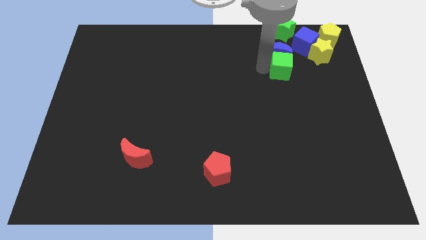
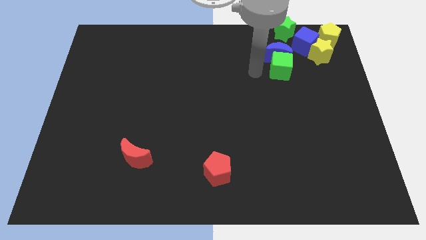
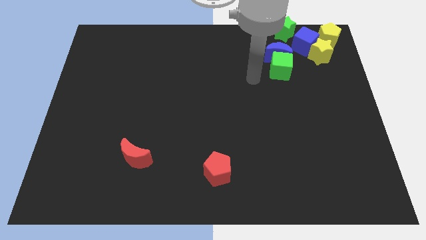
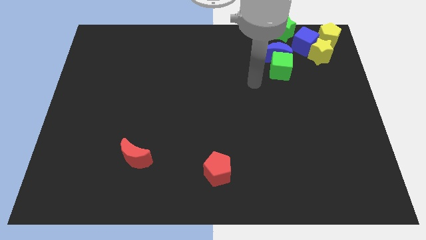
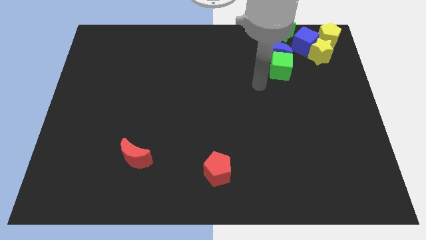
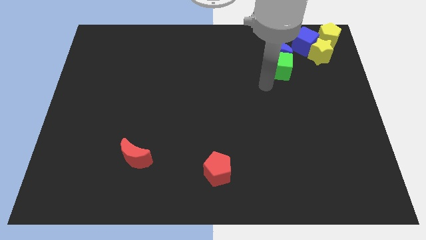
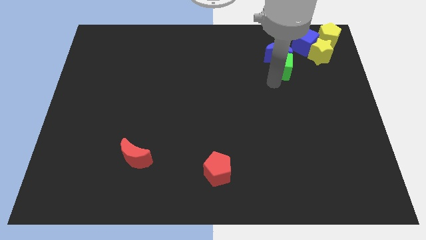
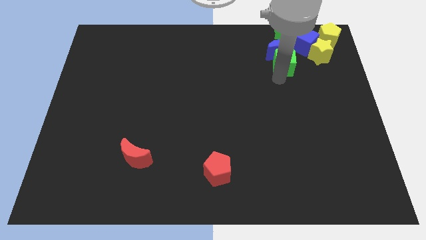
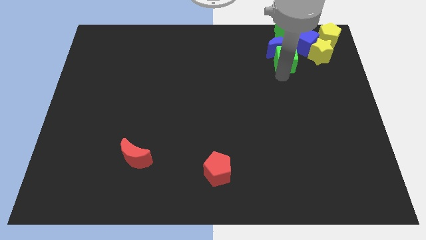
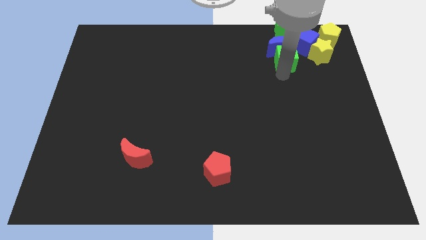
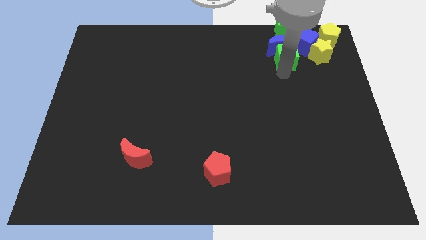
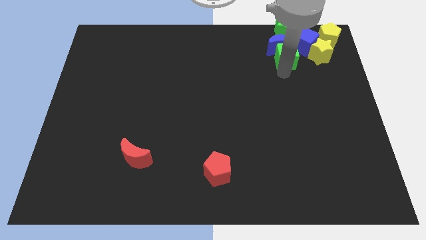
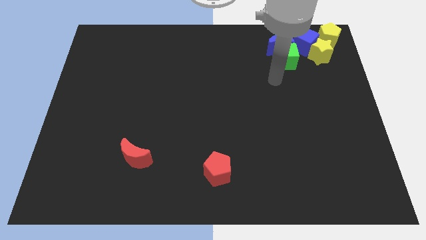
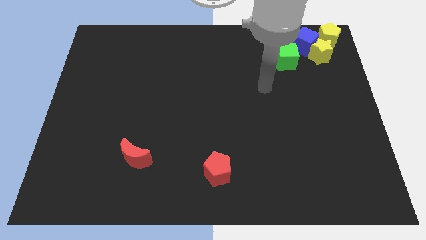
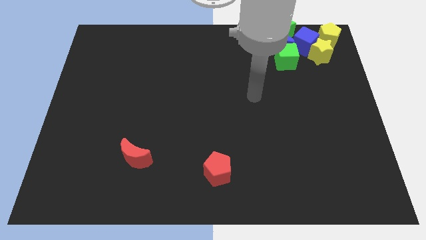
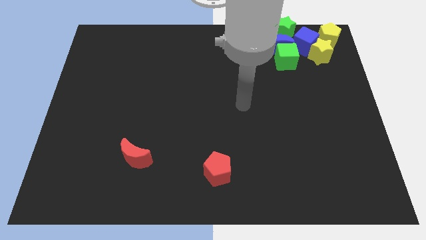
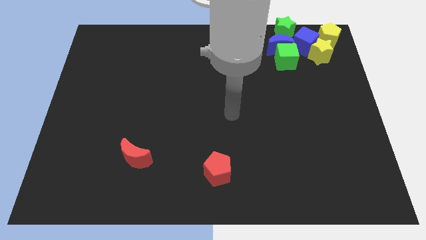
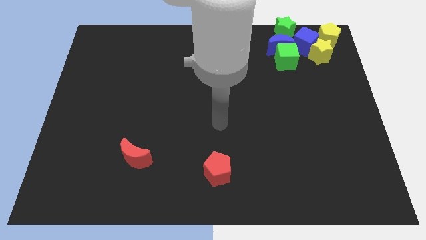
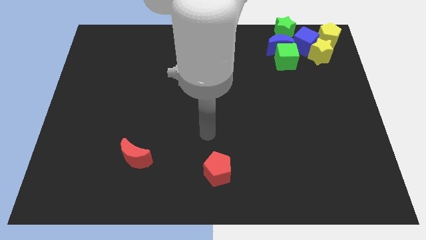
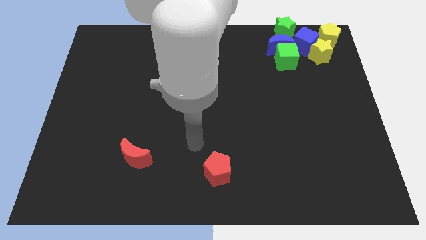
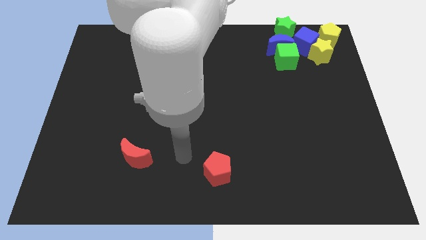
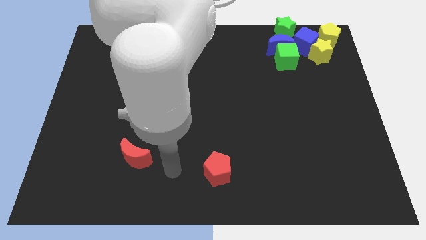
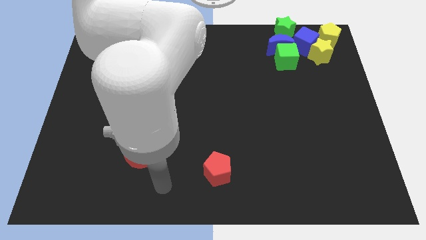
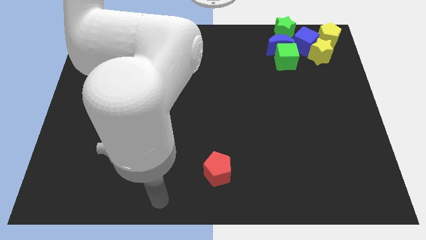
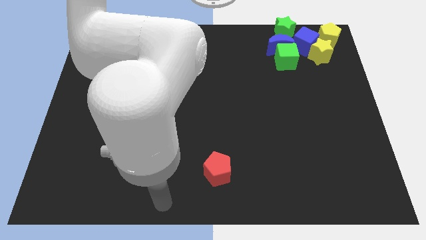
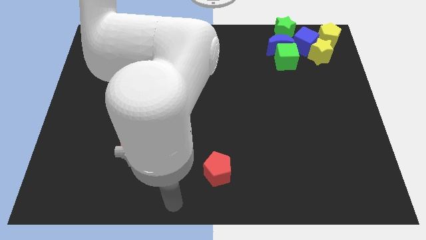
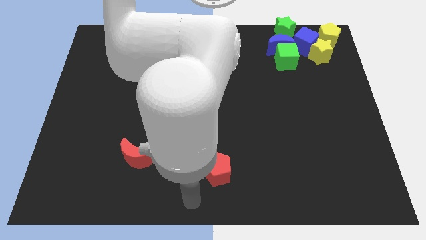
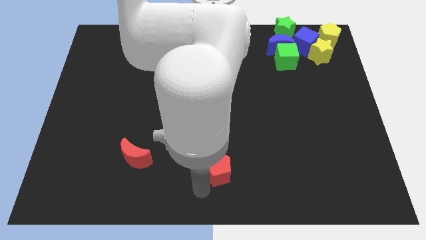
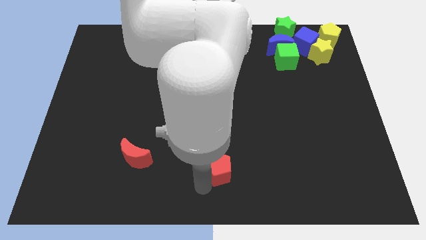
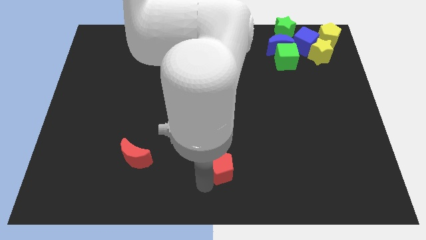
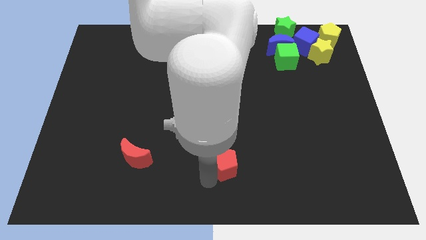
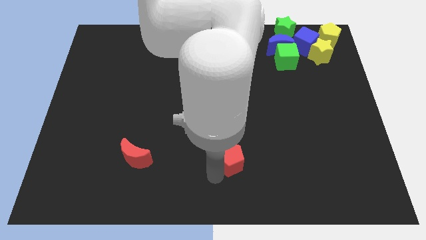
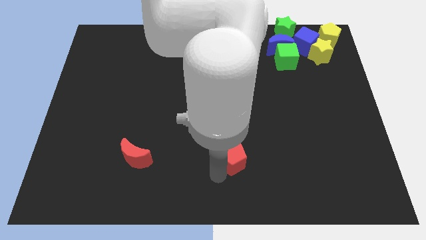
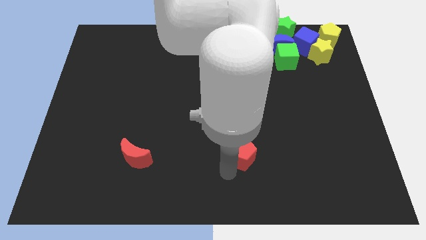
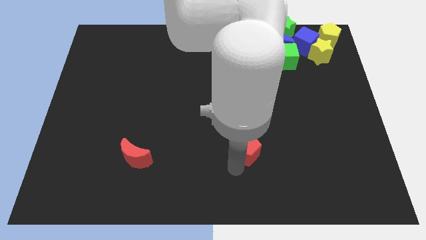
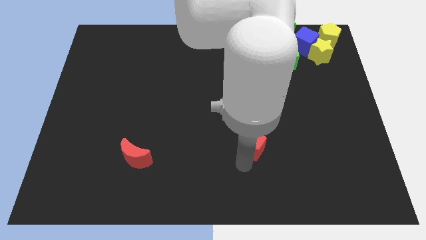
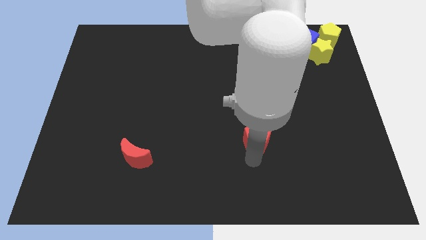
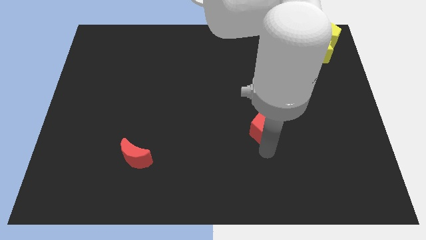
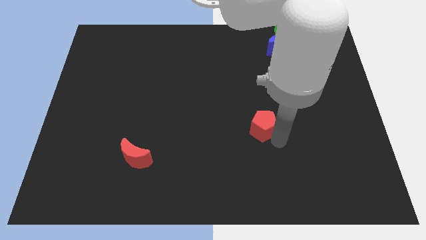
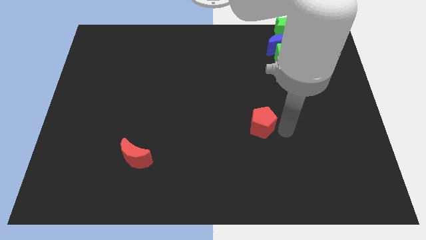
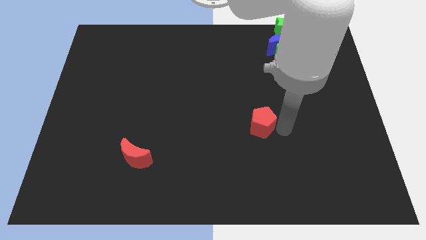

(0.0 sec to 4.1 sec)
push red pentagon upwards

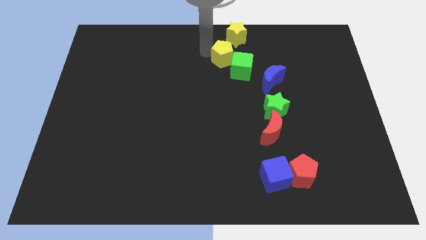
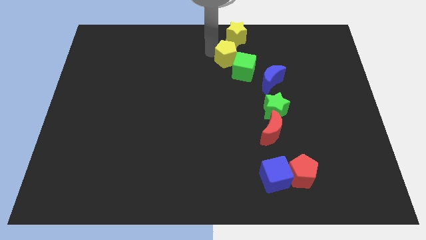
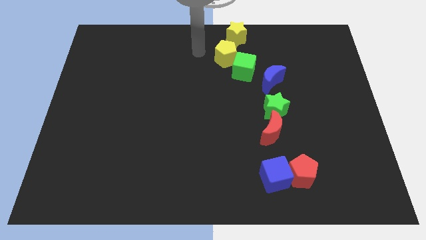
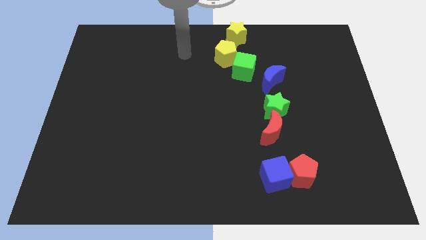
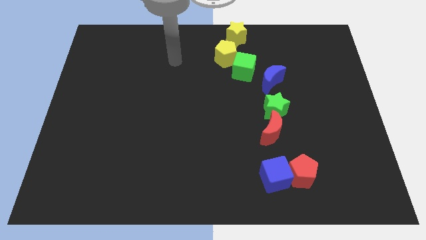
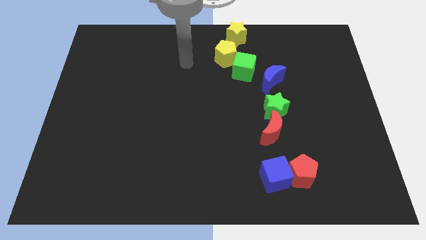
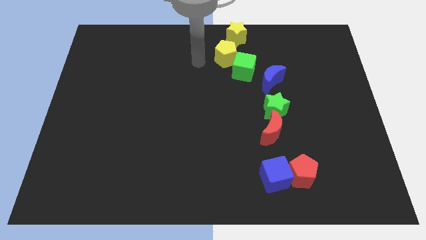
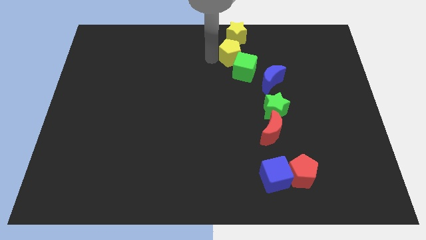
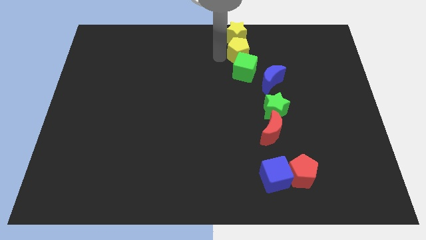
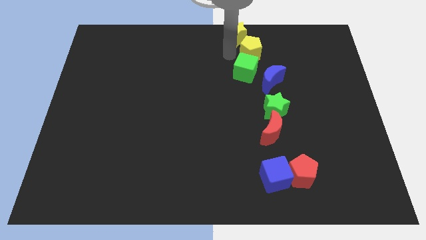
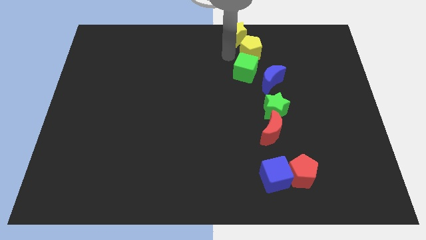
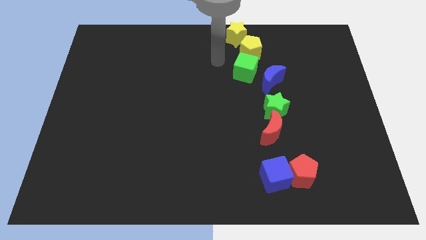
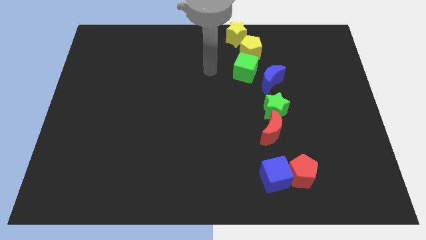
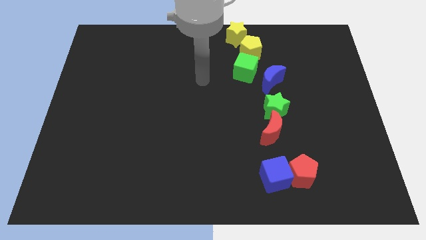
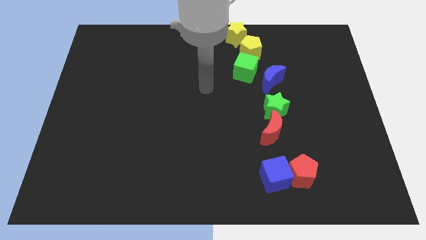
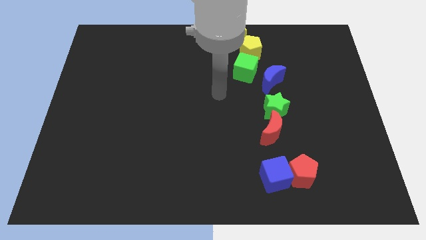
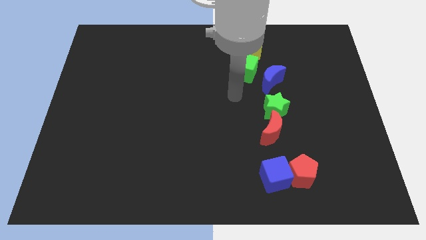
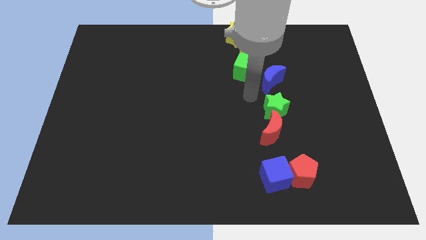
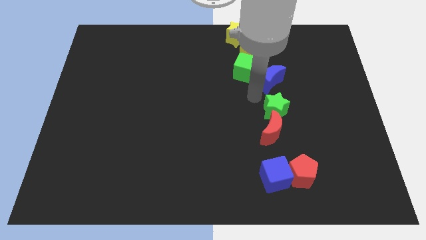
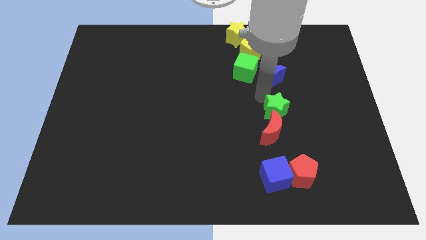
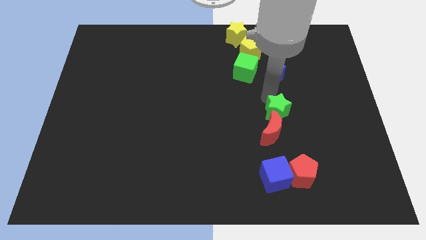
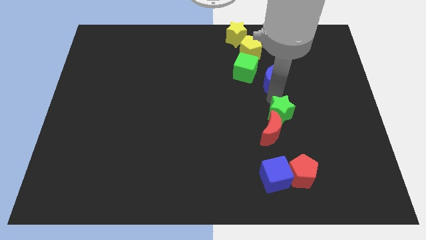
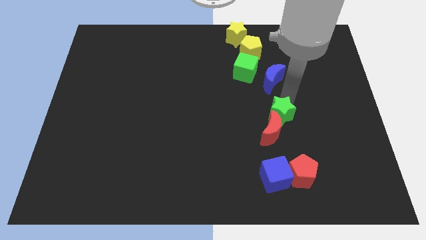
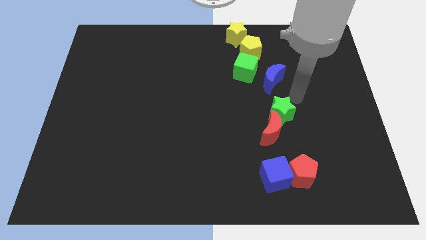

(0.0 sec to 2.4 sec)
move yellow pentagon diagonally above green cube

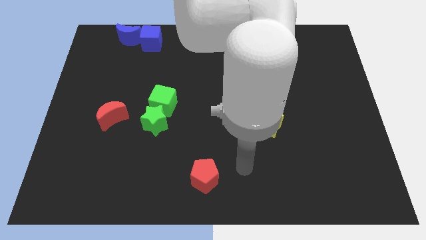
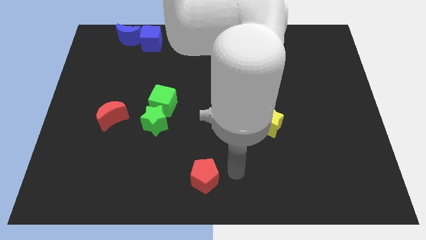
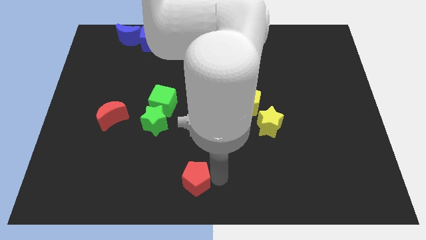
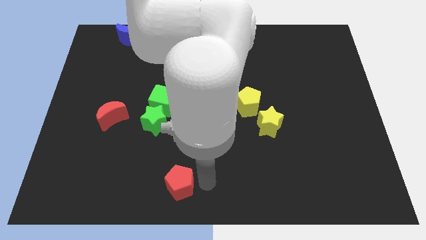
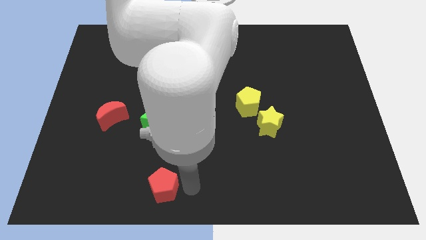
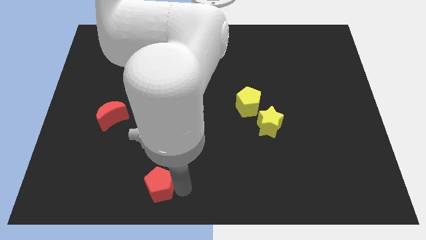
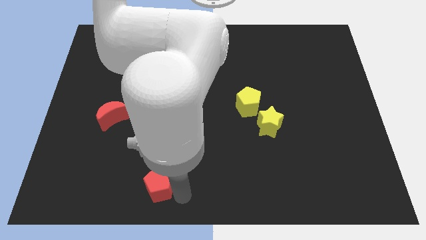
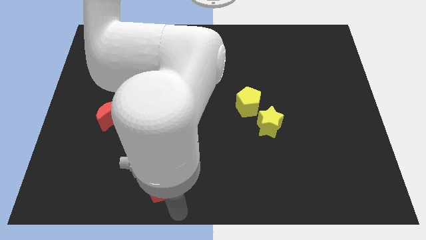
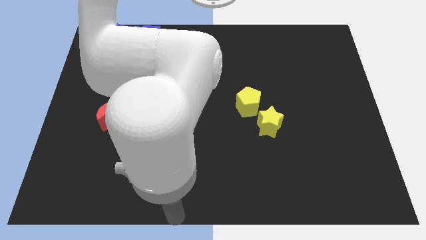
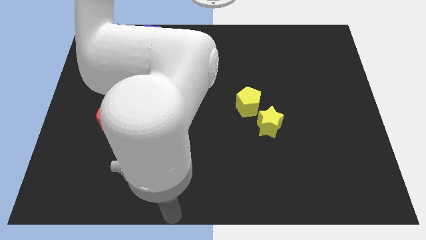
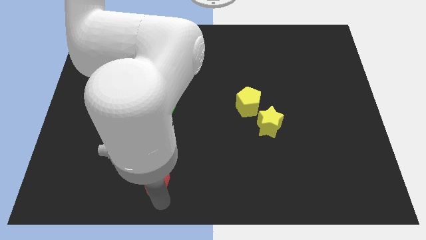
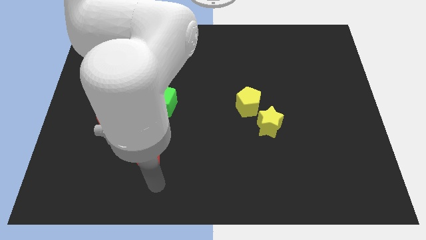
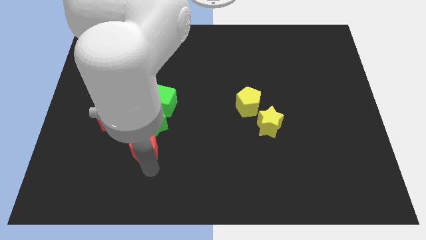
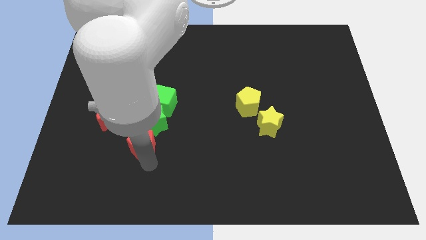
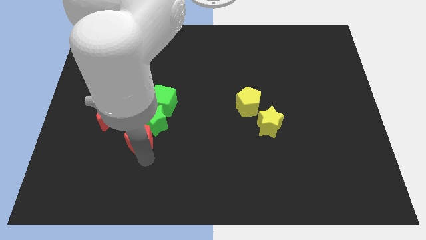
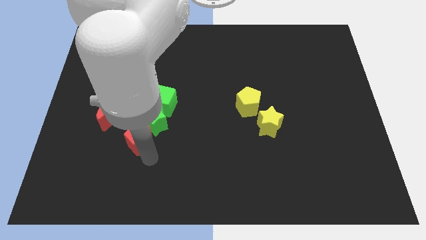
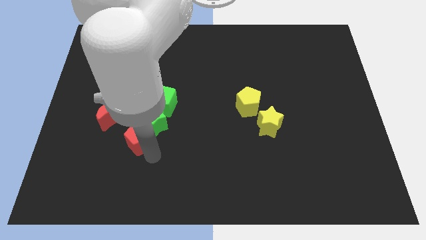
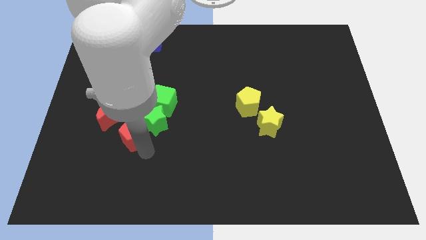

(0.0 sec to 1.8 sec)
push the red pentagon into the green star

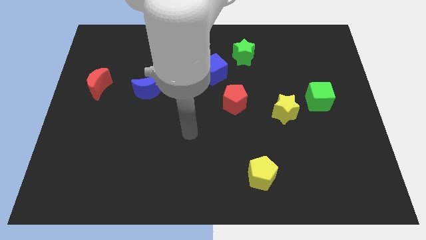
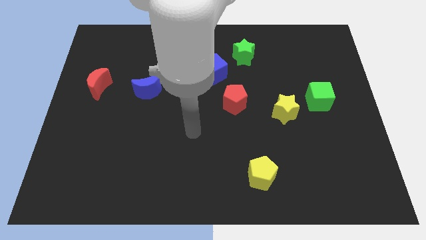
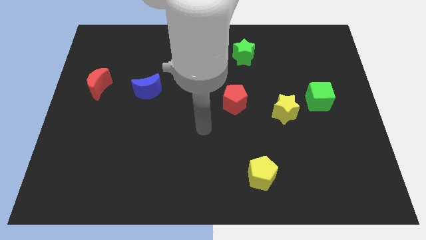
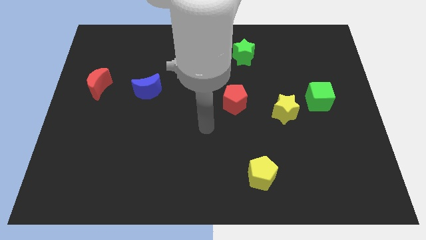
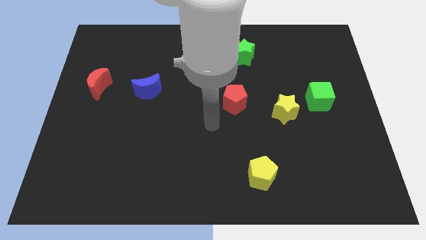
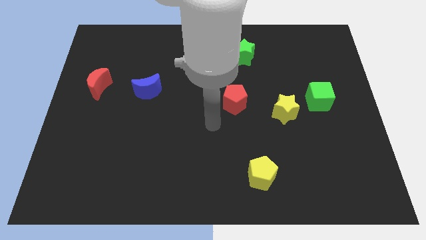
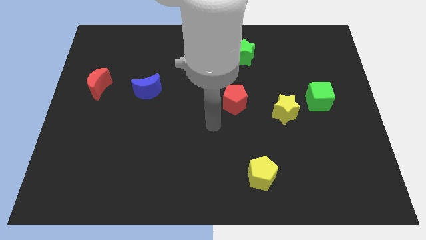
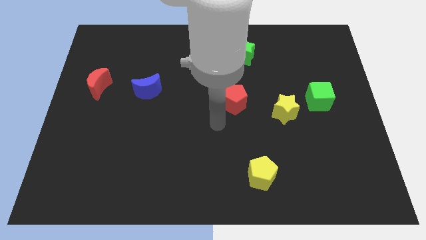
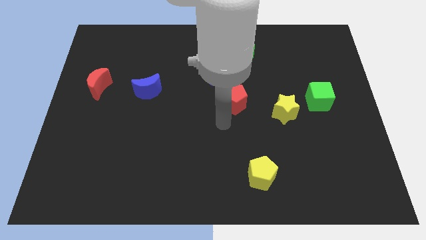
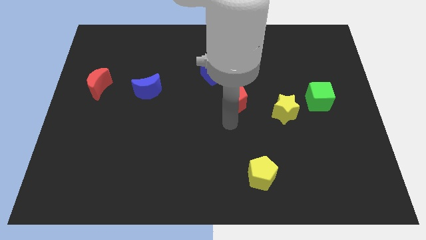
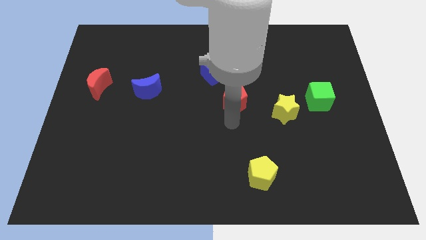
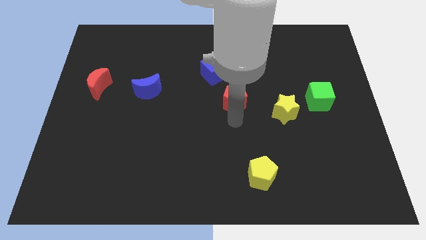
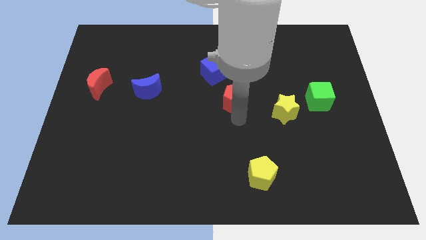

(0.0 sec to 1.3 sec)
move your arm to the center
